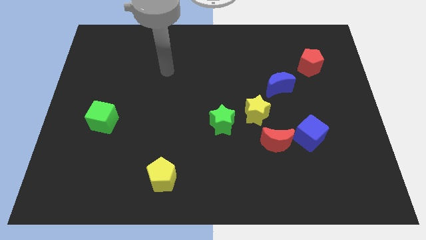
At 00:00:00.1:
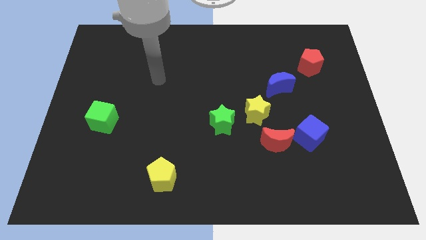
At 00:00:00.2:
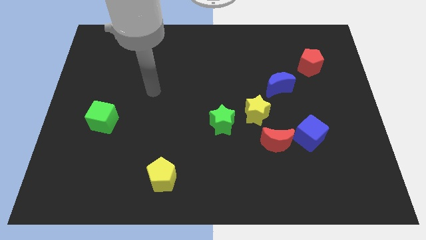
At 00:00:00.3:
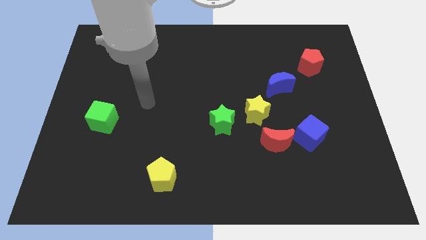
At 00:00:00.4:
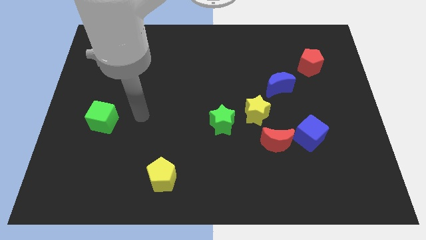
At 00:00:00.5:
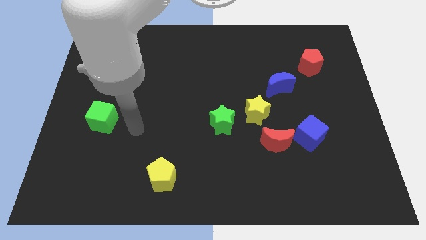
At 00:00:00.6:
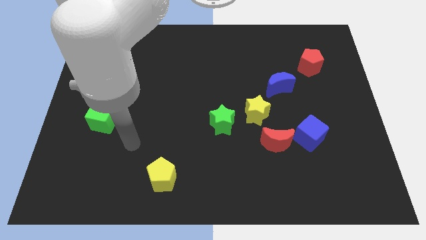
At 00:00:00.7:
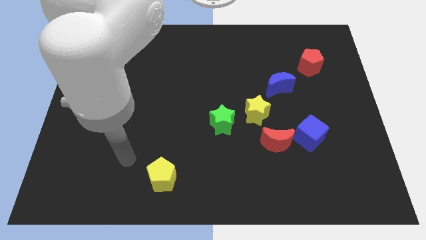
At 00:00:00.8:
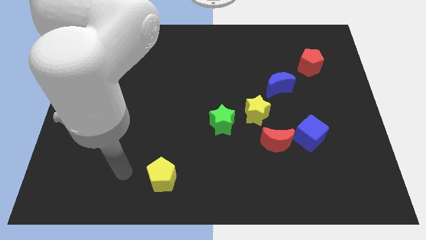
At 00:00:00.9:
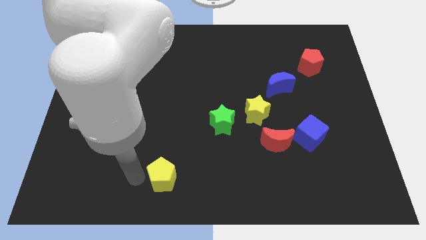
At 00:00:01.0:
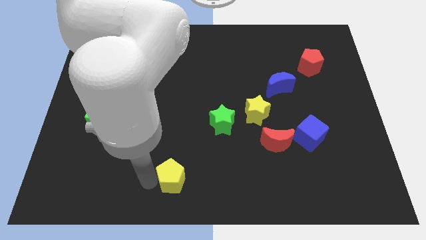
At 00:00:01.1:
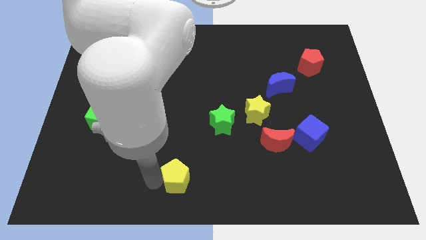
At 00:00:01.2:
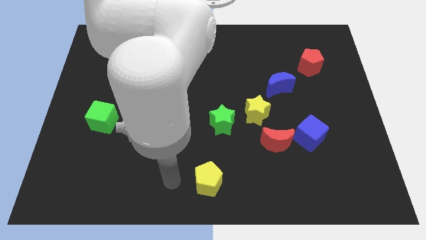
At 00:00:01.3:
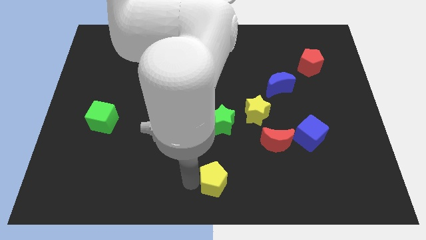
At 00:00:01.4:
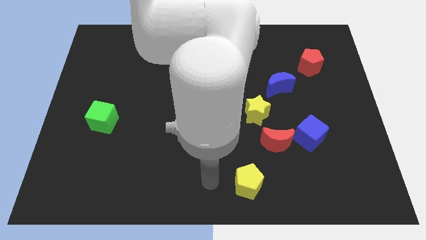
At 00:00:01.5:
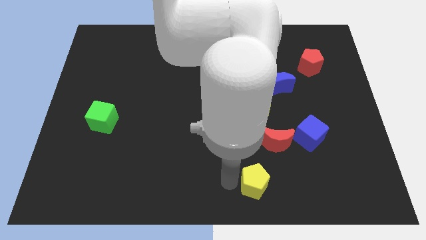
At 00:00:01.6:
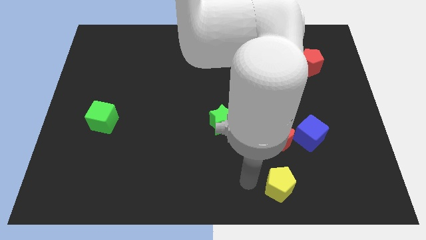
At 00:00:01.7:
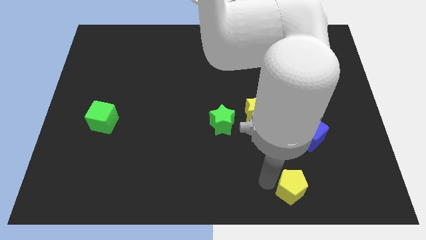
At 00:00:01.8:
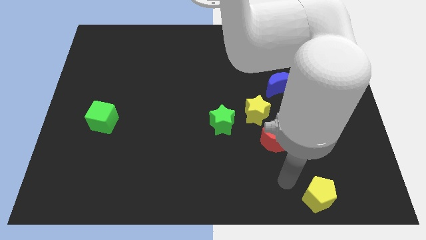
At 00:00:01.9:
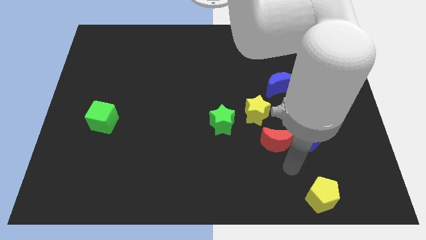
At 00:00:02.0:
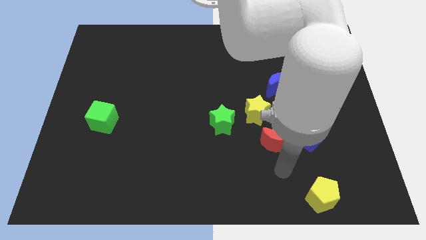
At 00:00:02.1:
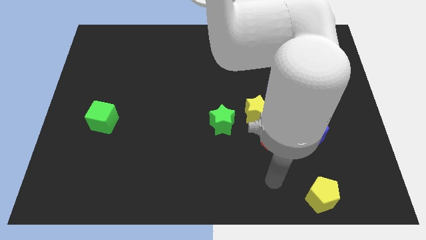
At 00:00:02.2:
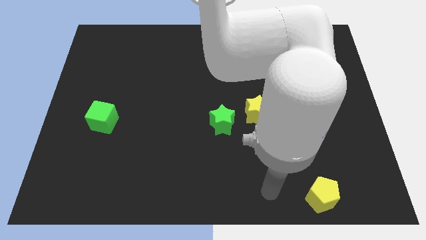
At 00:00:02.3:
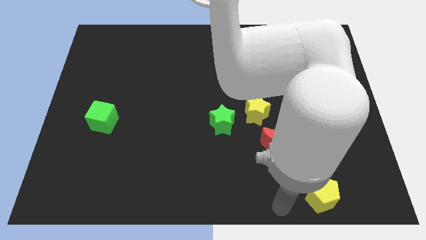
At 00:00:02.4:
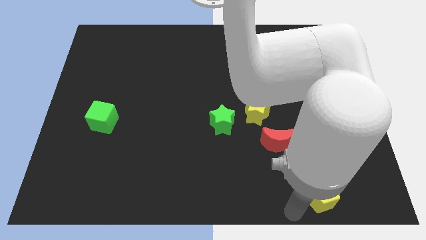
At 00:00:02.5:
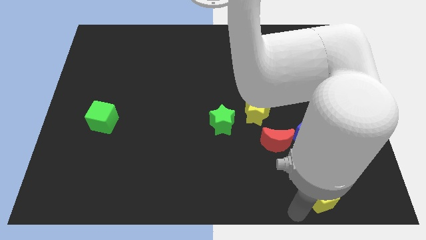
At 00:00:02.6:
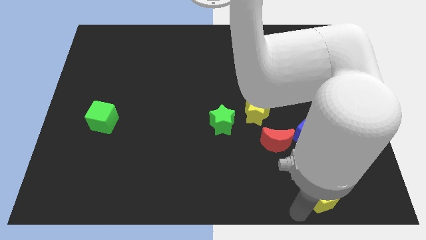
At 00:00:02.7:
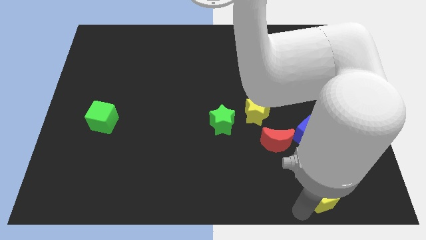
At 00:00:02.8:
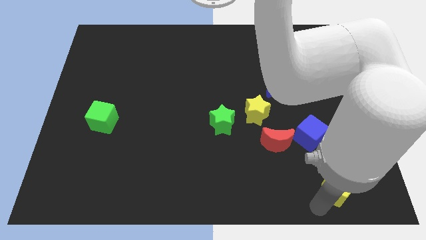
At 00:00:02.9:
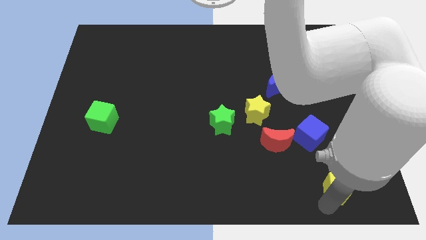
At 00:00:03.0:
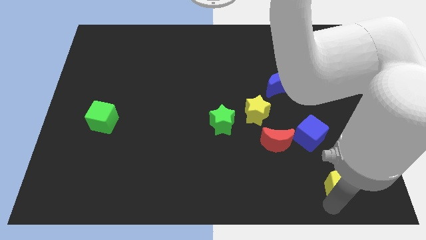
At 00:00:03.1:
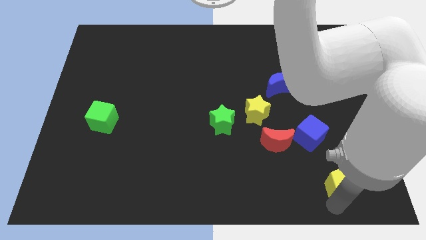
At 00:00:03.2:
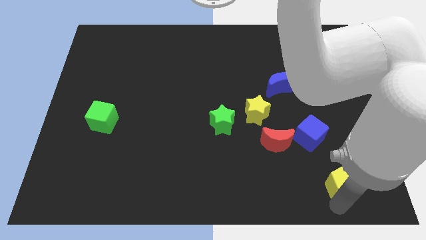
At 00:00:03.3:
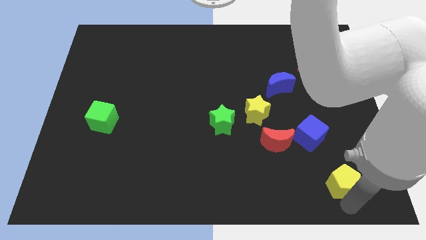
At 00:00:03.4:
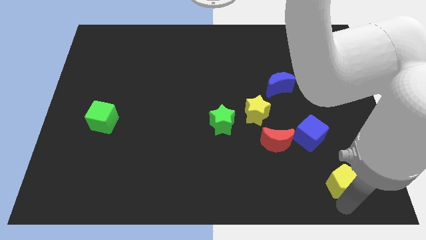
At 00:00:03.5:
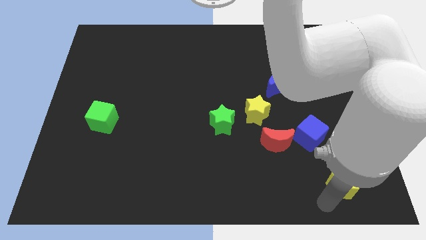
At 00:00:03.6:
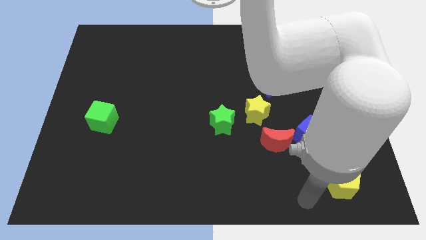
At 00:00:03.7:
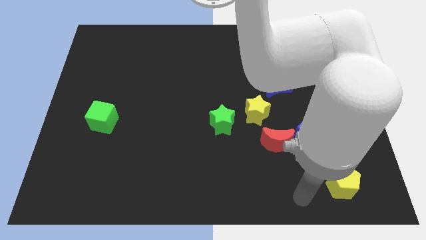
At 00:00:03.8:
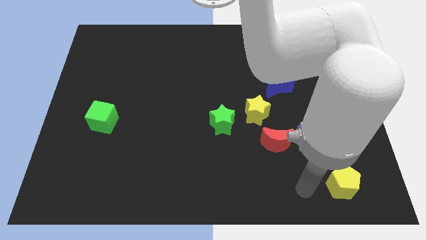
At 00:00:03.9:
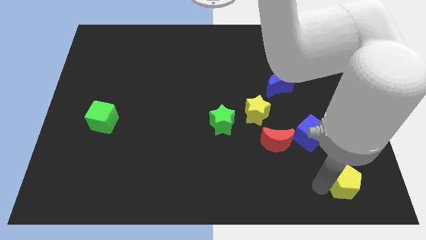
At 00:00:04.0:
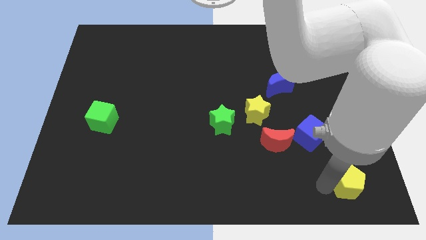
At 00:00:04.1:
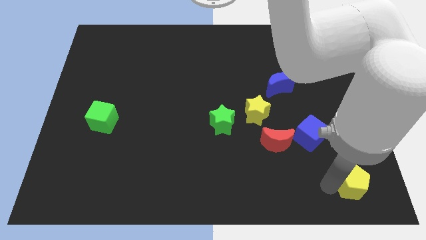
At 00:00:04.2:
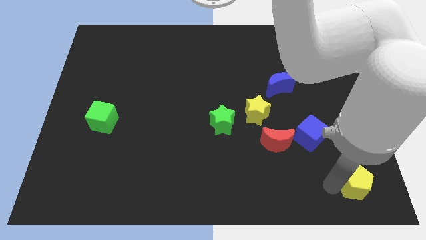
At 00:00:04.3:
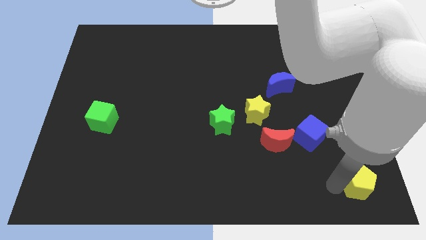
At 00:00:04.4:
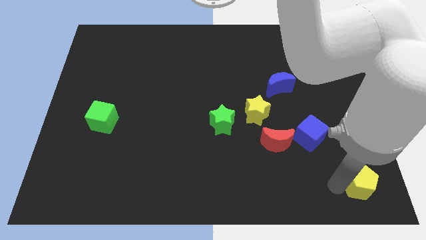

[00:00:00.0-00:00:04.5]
move the yellow pentagon towards the bottom right corner

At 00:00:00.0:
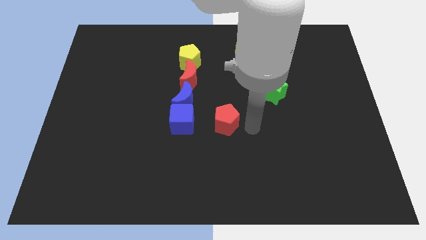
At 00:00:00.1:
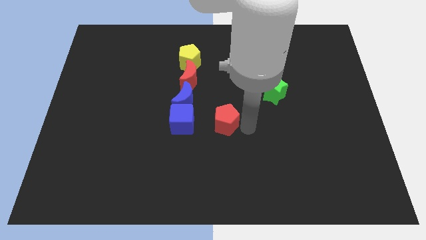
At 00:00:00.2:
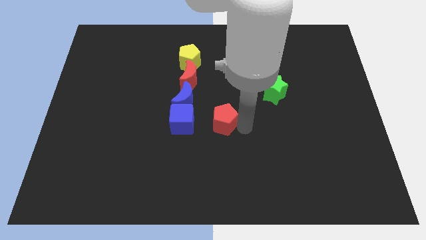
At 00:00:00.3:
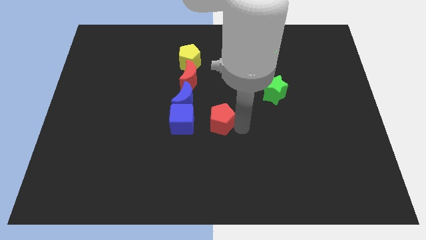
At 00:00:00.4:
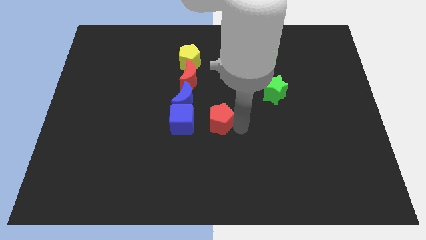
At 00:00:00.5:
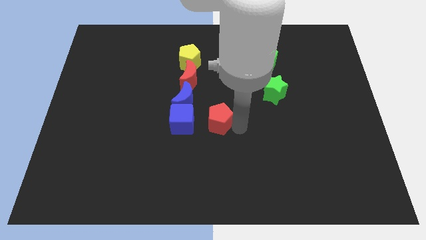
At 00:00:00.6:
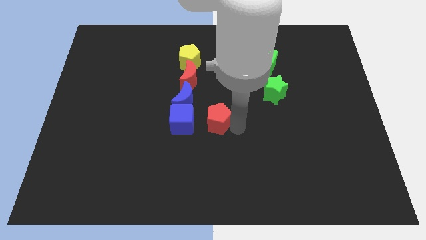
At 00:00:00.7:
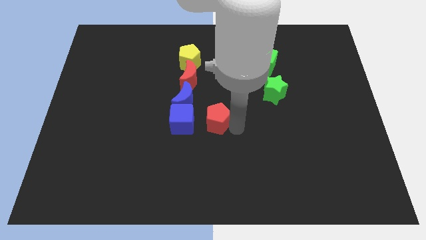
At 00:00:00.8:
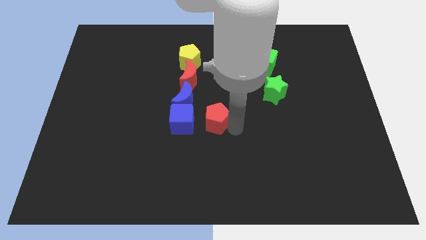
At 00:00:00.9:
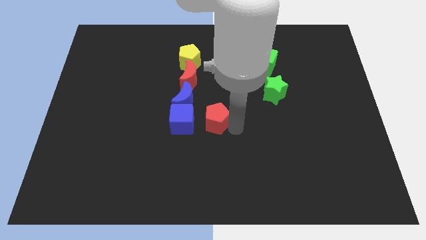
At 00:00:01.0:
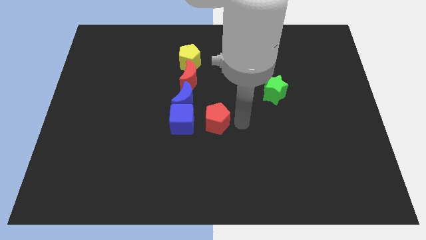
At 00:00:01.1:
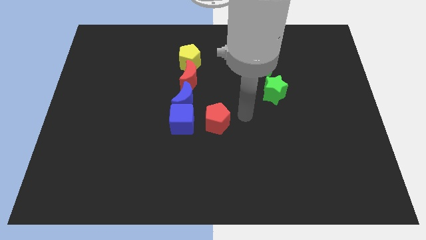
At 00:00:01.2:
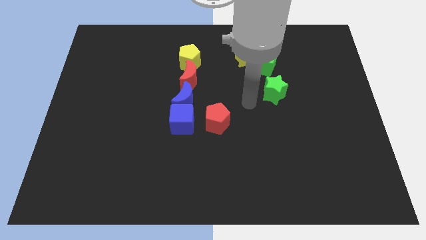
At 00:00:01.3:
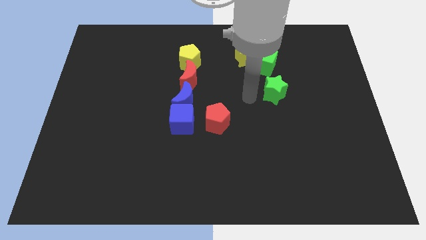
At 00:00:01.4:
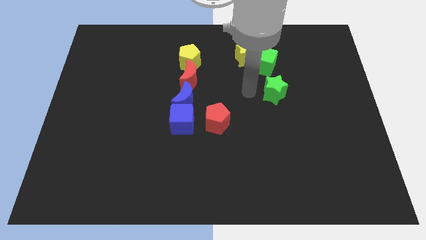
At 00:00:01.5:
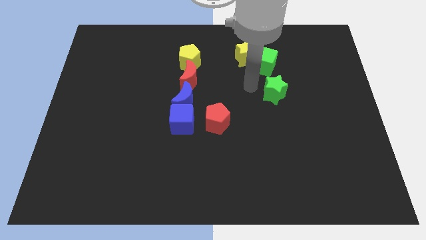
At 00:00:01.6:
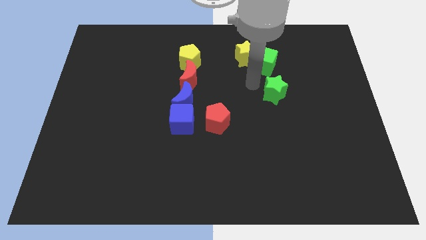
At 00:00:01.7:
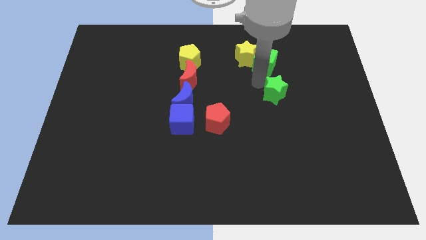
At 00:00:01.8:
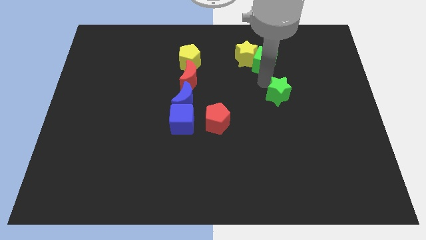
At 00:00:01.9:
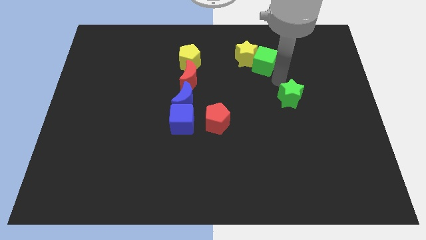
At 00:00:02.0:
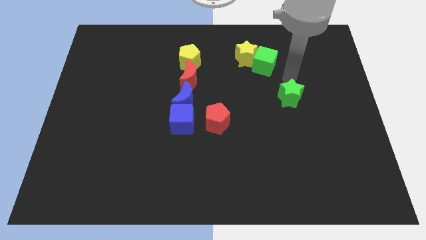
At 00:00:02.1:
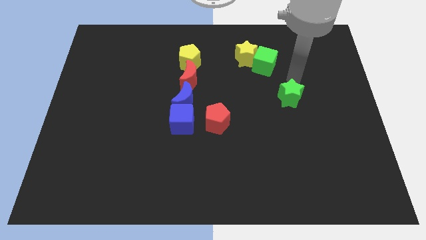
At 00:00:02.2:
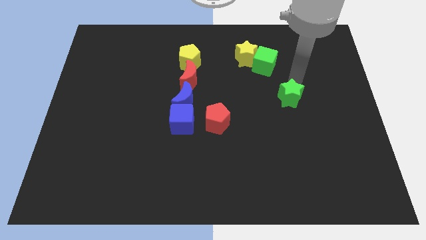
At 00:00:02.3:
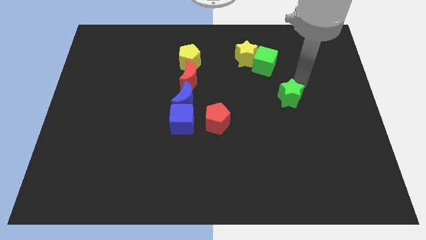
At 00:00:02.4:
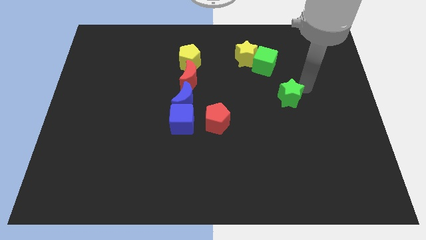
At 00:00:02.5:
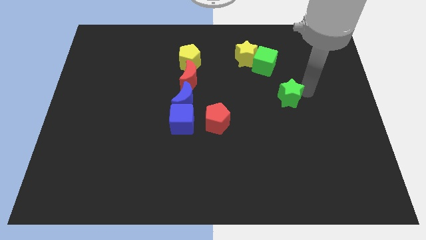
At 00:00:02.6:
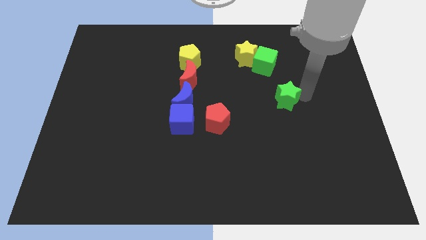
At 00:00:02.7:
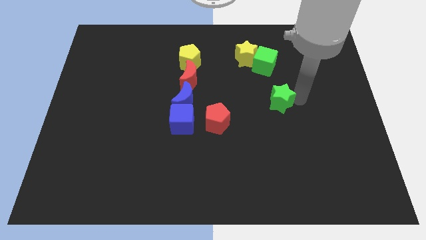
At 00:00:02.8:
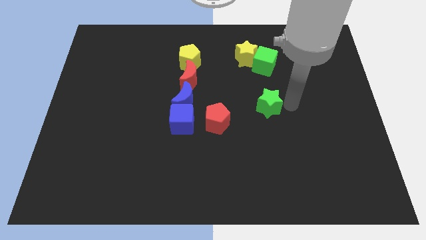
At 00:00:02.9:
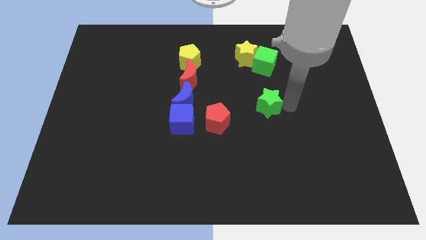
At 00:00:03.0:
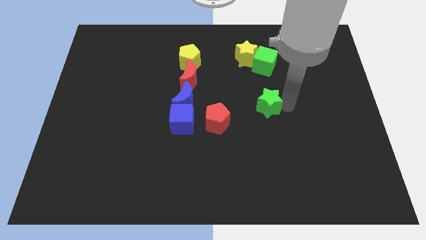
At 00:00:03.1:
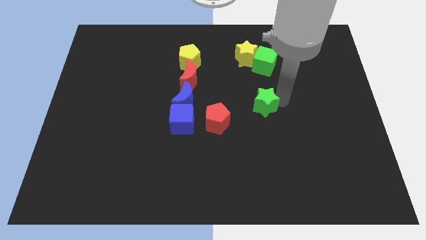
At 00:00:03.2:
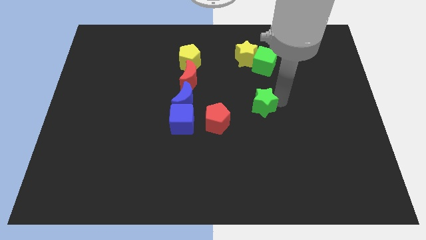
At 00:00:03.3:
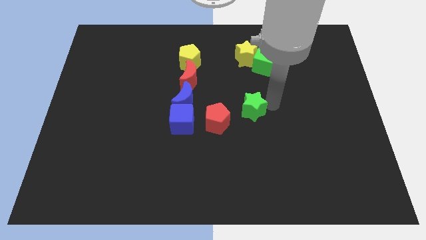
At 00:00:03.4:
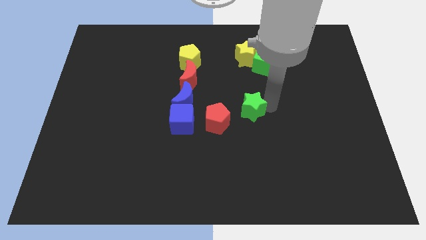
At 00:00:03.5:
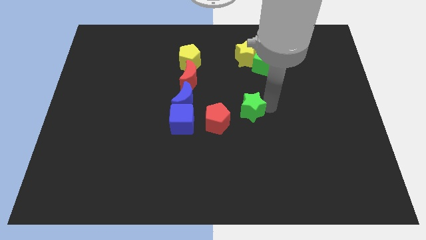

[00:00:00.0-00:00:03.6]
place the green star at the top right of the red pentagon

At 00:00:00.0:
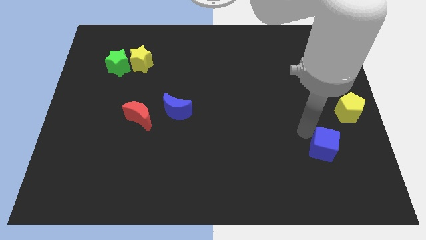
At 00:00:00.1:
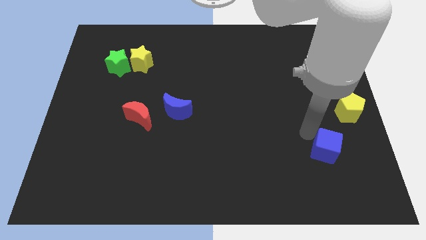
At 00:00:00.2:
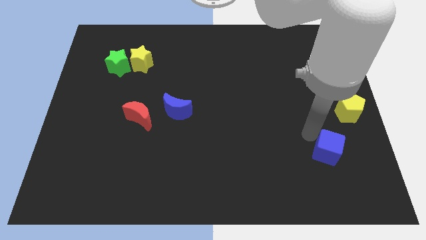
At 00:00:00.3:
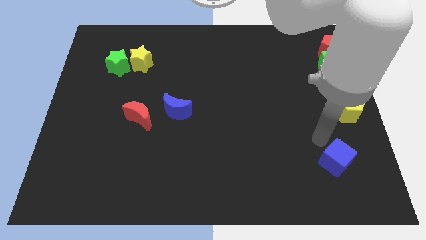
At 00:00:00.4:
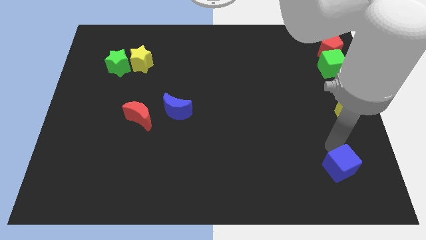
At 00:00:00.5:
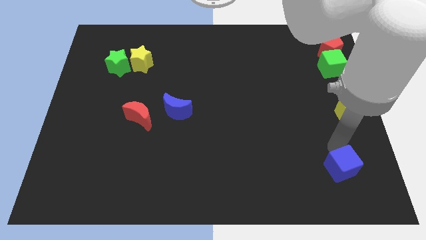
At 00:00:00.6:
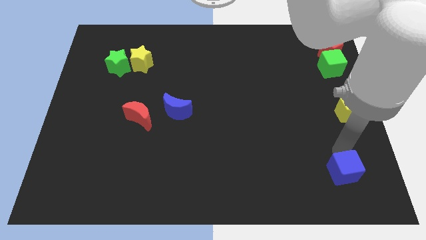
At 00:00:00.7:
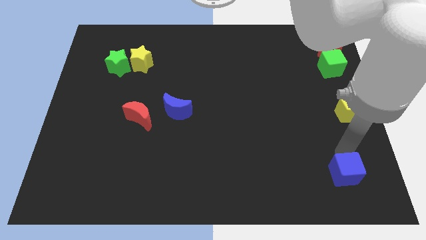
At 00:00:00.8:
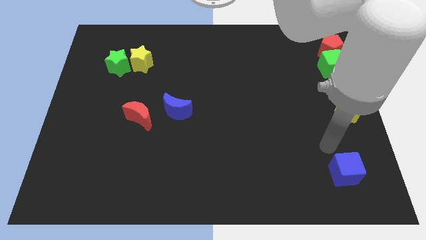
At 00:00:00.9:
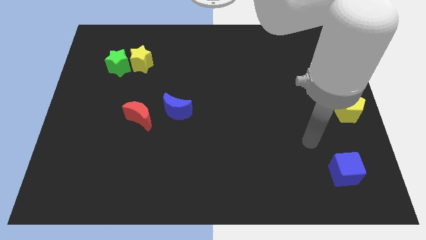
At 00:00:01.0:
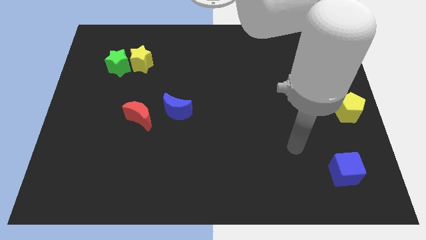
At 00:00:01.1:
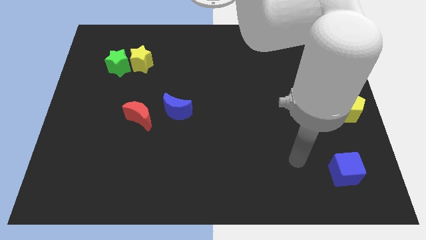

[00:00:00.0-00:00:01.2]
place the blue block below the yellow pentagon
